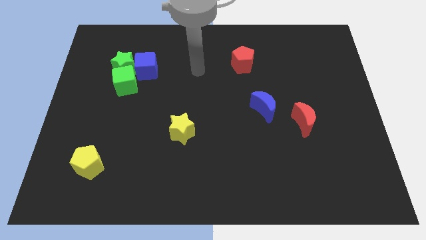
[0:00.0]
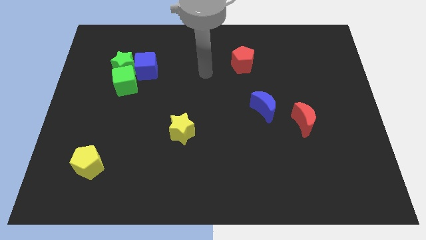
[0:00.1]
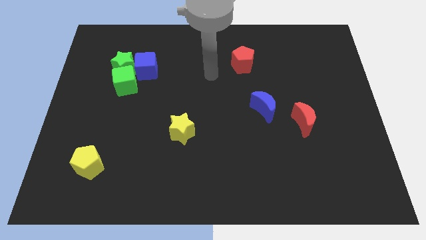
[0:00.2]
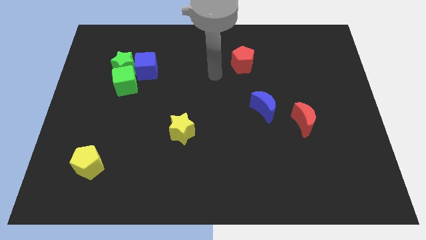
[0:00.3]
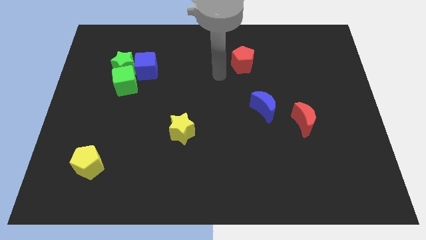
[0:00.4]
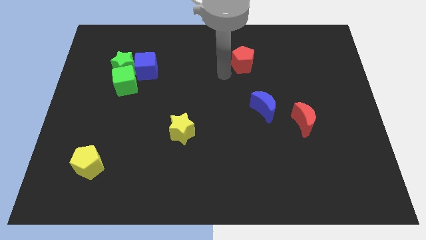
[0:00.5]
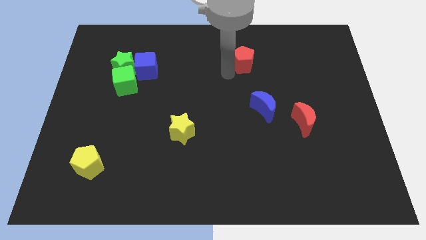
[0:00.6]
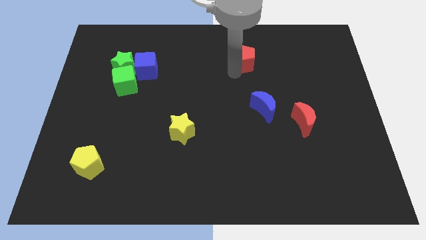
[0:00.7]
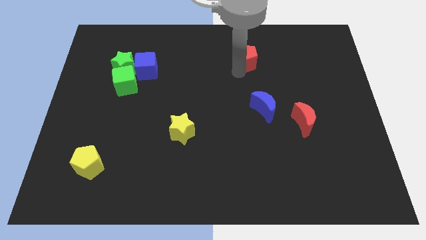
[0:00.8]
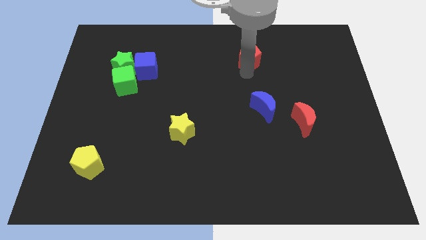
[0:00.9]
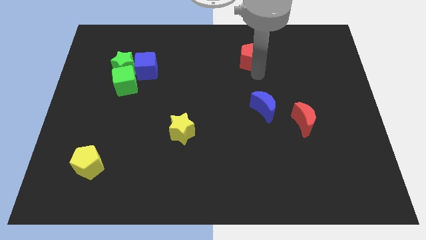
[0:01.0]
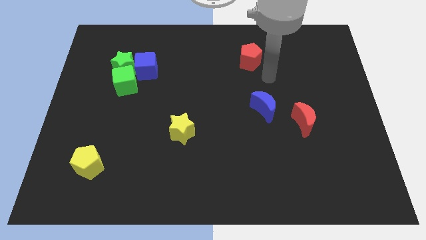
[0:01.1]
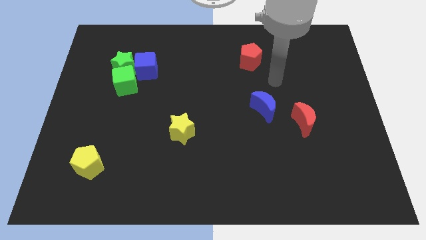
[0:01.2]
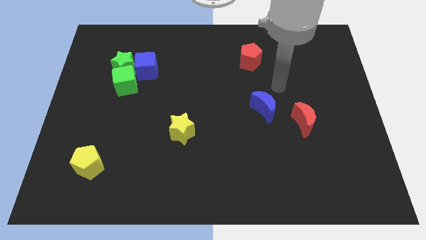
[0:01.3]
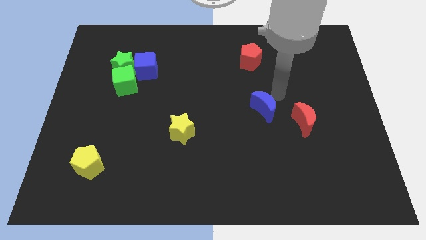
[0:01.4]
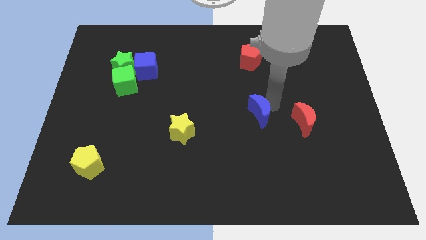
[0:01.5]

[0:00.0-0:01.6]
move the blue moon below the red pentagon

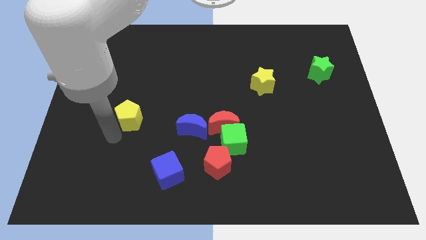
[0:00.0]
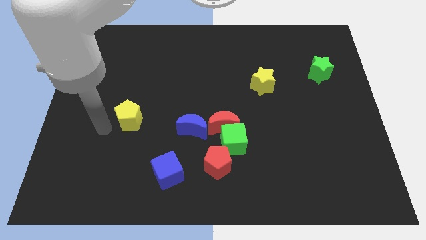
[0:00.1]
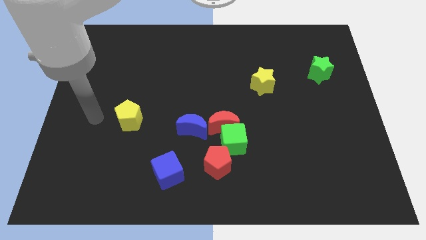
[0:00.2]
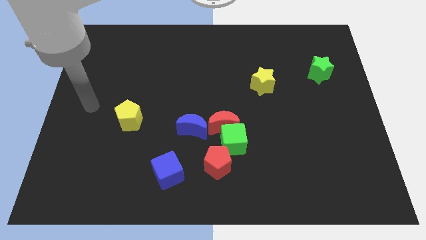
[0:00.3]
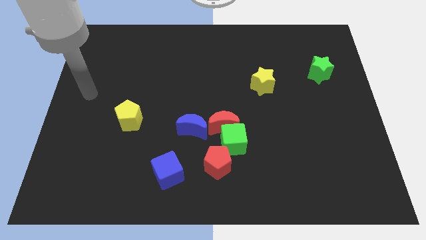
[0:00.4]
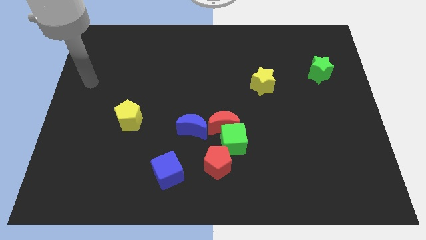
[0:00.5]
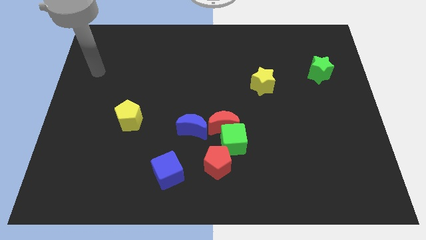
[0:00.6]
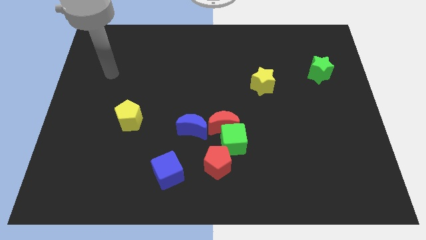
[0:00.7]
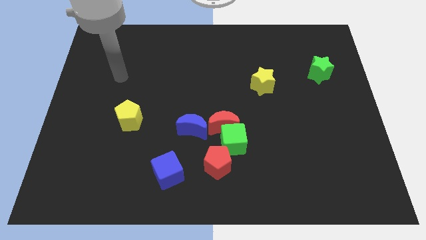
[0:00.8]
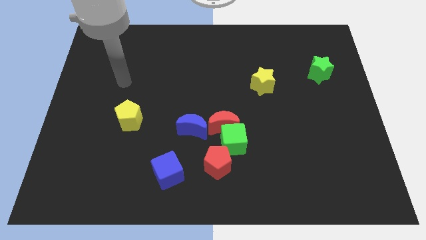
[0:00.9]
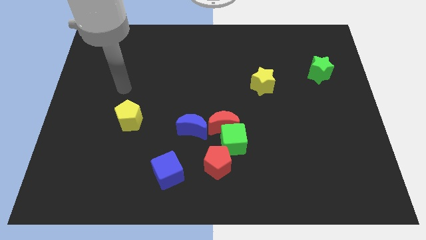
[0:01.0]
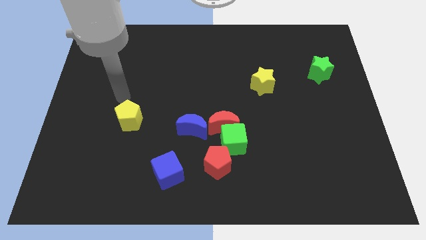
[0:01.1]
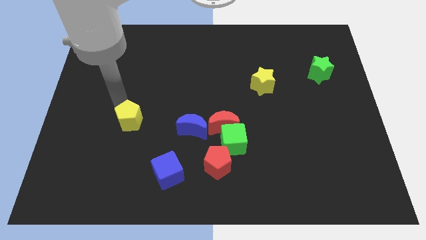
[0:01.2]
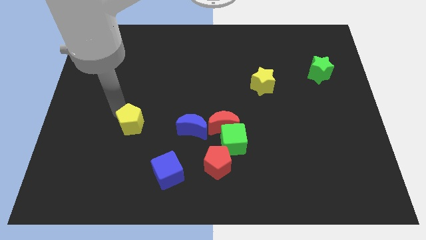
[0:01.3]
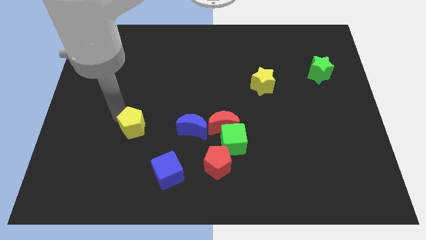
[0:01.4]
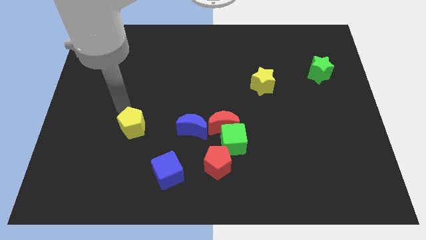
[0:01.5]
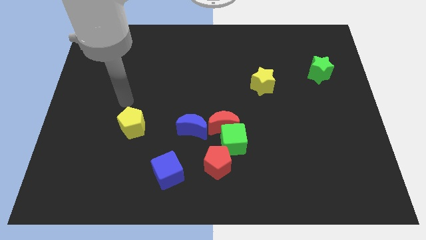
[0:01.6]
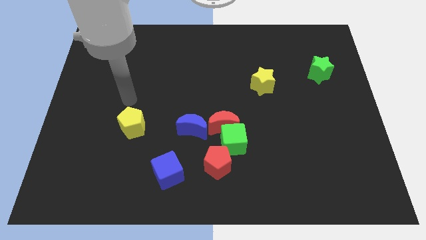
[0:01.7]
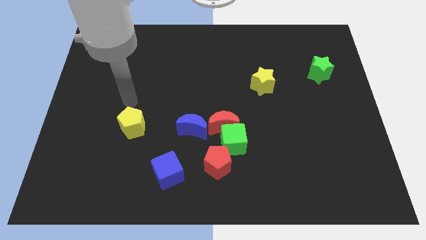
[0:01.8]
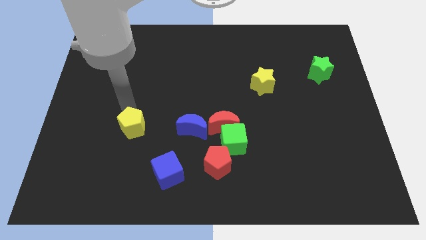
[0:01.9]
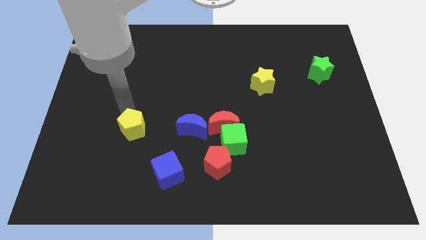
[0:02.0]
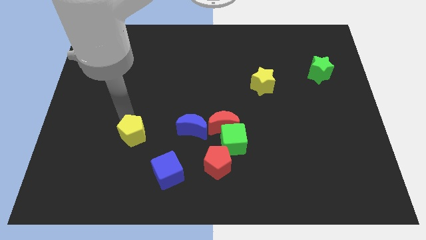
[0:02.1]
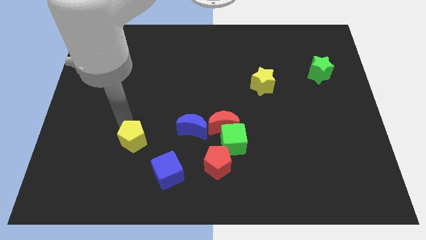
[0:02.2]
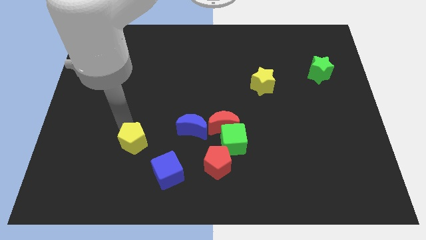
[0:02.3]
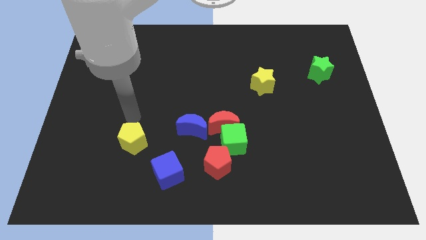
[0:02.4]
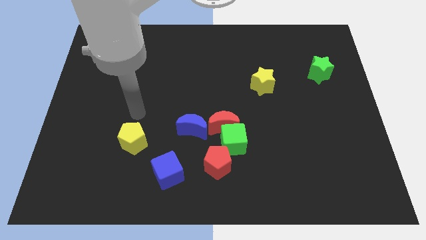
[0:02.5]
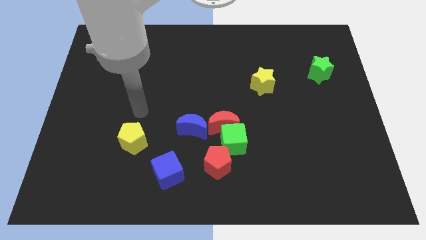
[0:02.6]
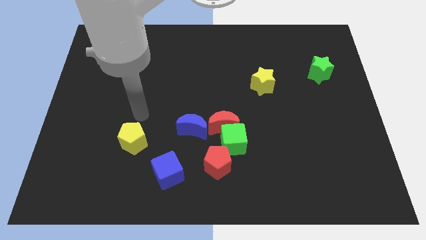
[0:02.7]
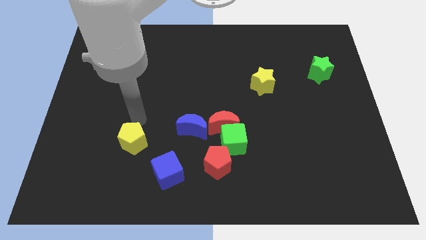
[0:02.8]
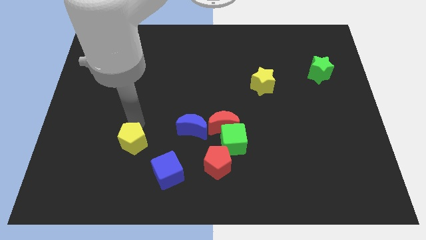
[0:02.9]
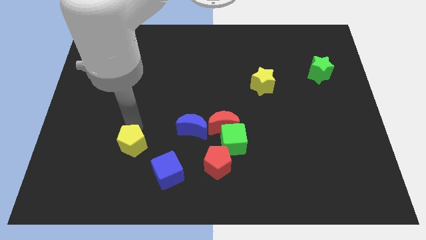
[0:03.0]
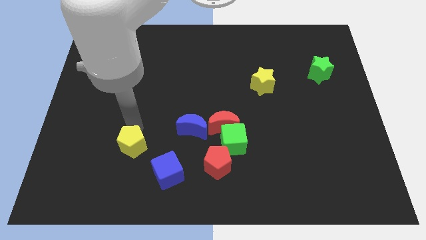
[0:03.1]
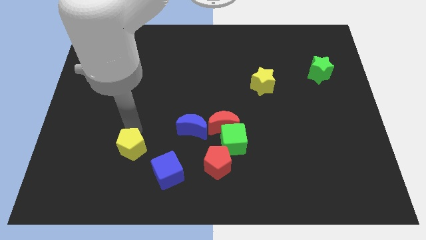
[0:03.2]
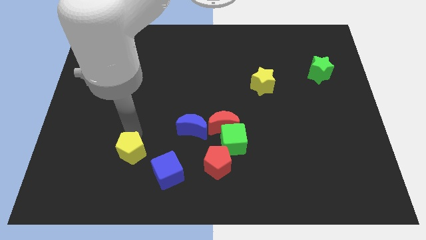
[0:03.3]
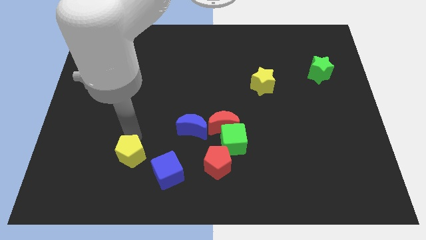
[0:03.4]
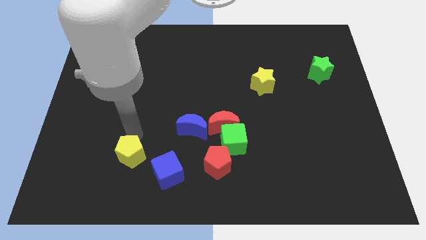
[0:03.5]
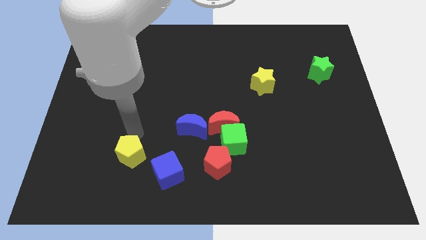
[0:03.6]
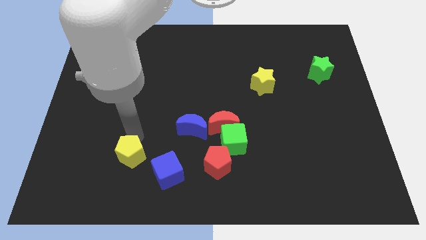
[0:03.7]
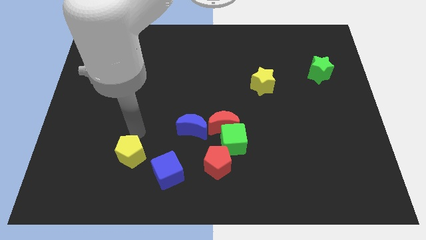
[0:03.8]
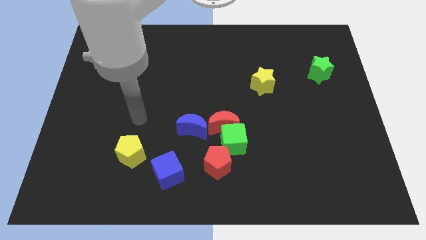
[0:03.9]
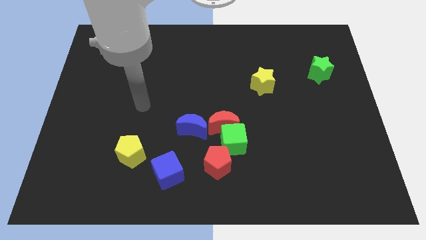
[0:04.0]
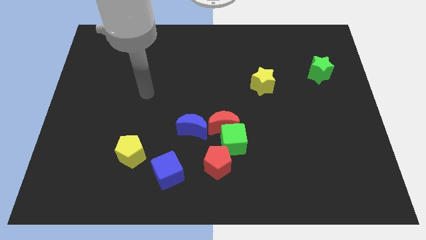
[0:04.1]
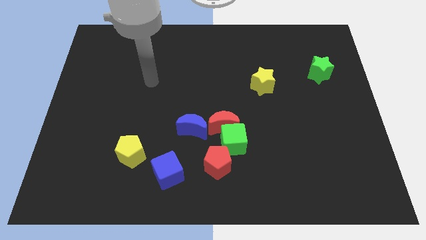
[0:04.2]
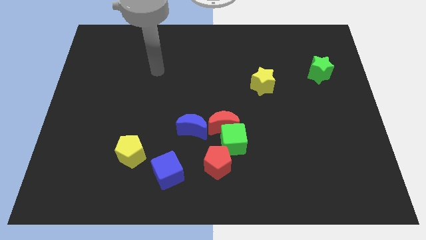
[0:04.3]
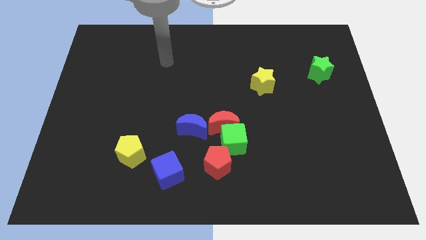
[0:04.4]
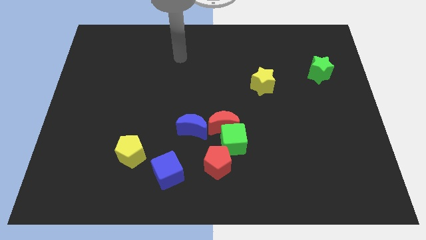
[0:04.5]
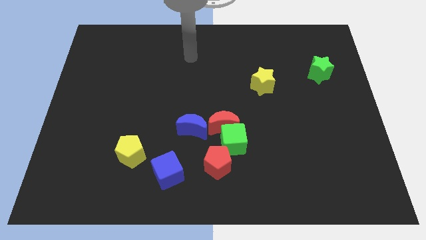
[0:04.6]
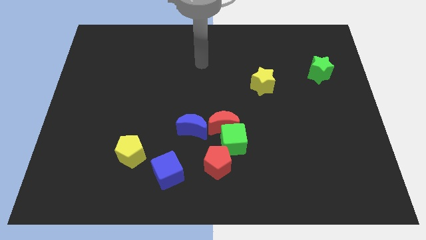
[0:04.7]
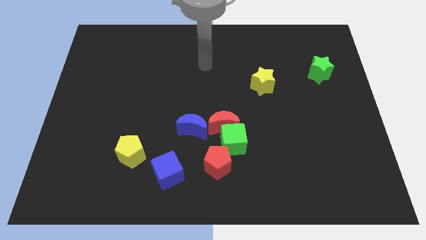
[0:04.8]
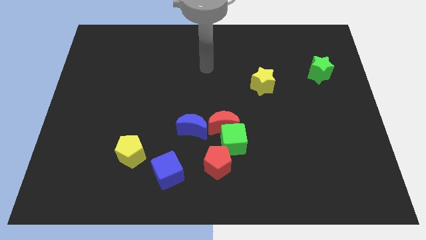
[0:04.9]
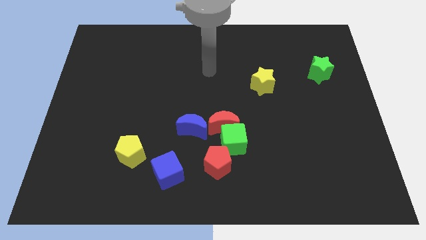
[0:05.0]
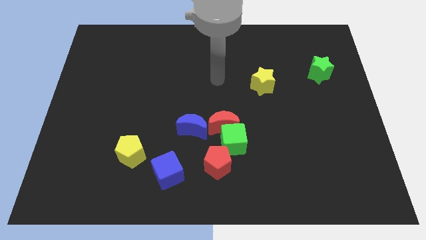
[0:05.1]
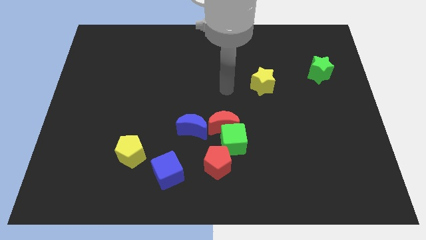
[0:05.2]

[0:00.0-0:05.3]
push the yellow pentagon towards the bottom center

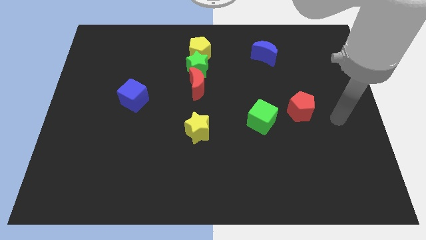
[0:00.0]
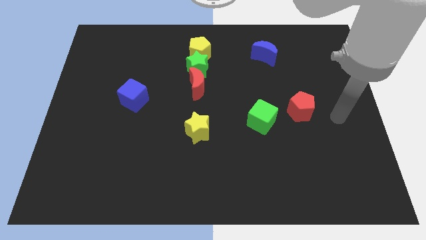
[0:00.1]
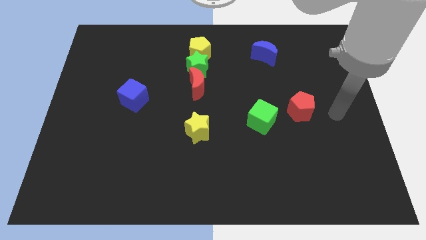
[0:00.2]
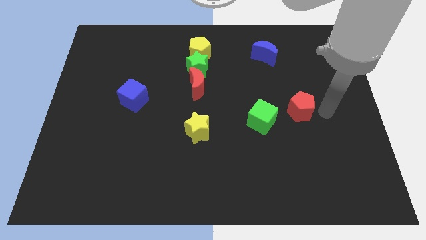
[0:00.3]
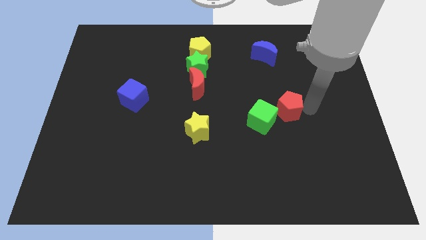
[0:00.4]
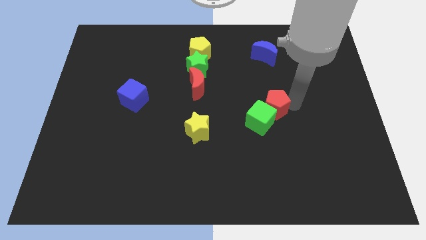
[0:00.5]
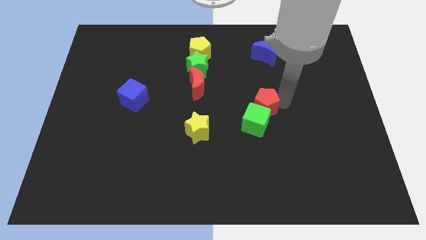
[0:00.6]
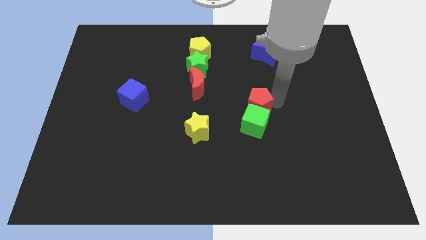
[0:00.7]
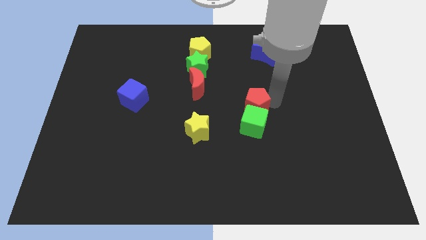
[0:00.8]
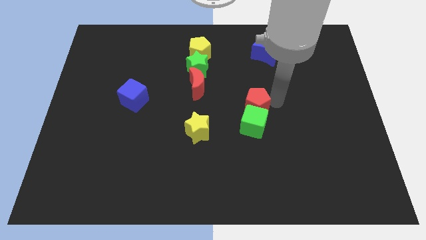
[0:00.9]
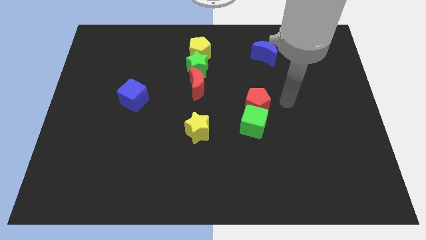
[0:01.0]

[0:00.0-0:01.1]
push the red pentagon into the green cube

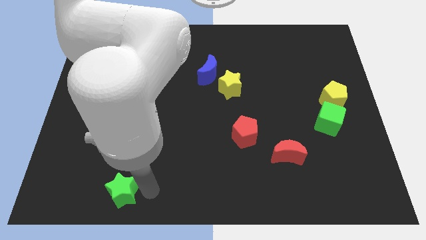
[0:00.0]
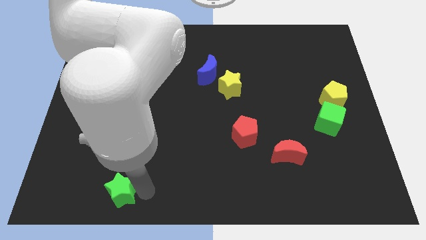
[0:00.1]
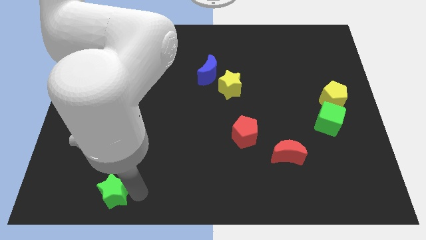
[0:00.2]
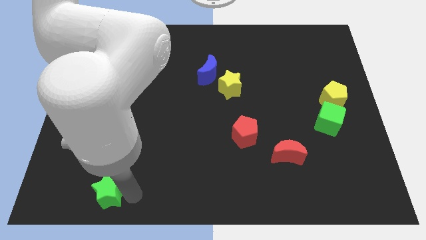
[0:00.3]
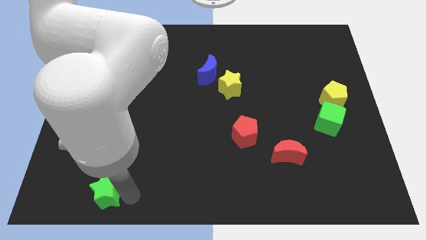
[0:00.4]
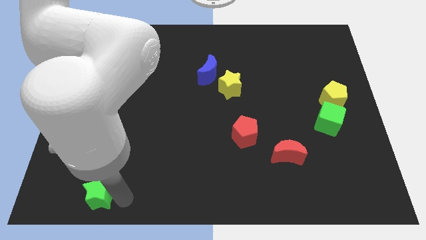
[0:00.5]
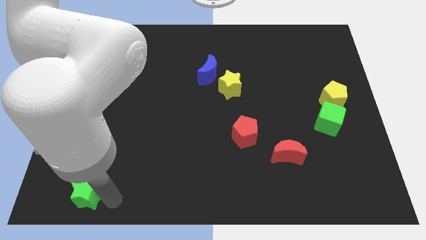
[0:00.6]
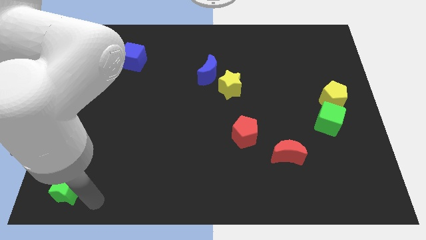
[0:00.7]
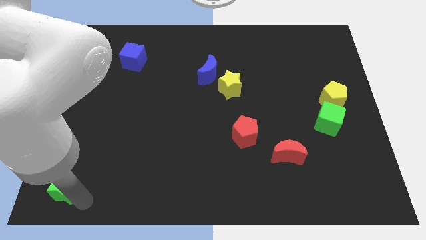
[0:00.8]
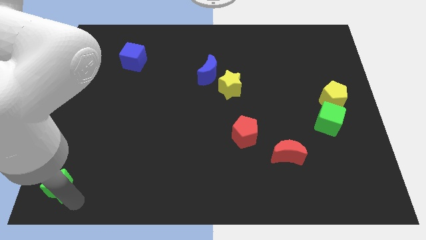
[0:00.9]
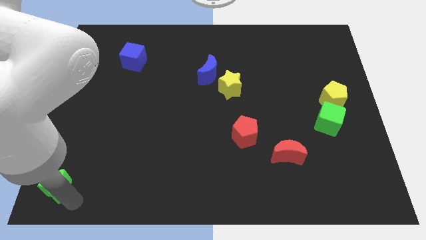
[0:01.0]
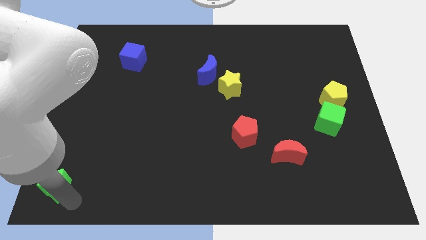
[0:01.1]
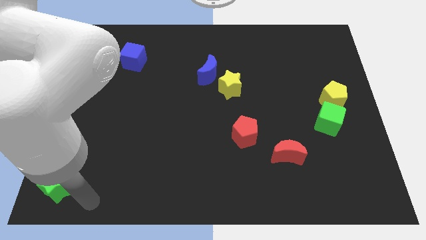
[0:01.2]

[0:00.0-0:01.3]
move the green star to the bottom left of the board
